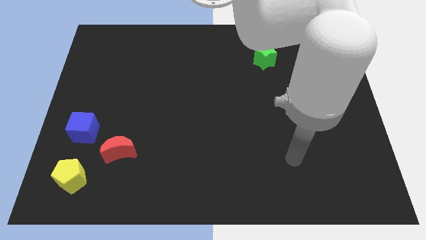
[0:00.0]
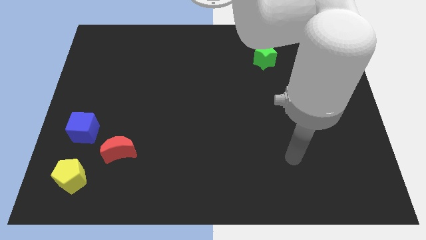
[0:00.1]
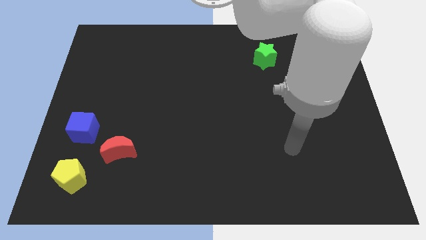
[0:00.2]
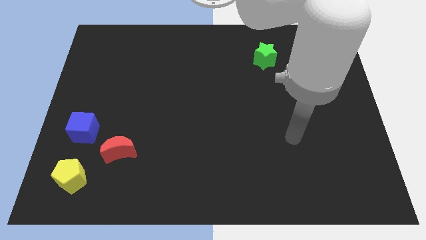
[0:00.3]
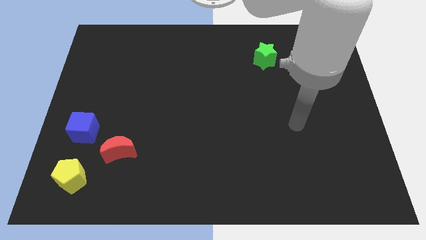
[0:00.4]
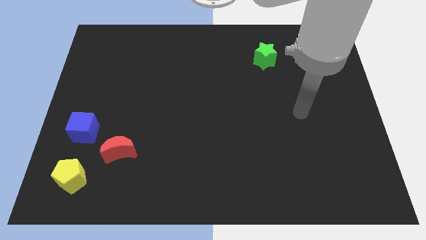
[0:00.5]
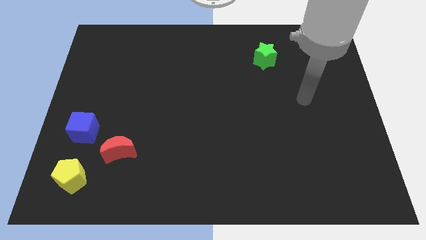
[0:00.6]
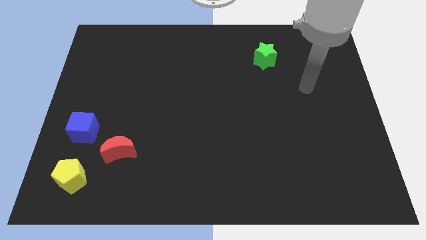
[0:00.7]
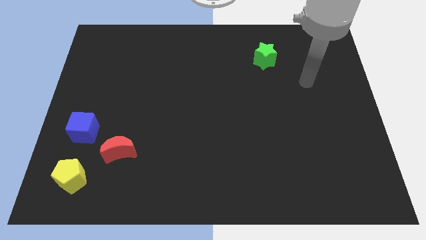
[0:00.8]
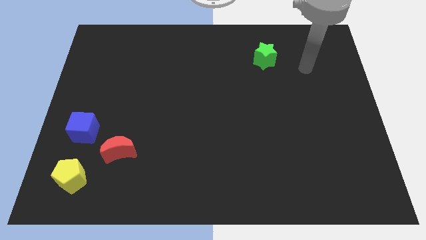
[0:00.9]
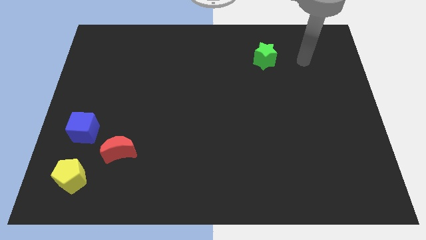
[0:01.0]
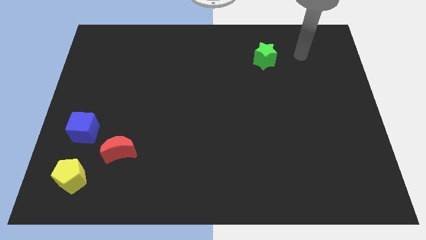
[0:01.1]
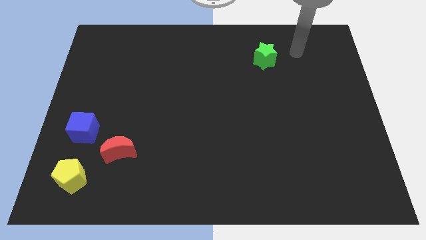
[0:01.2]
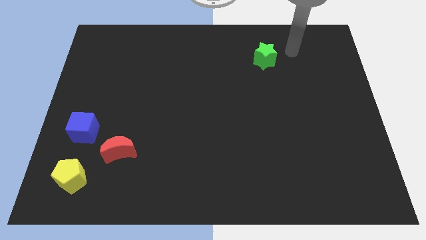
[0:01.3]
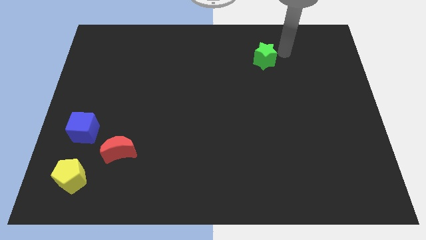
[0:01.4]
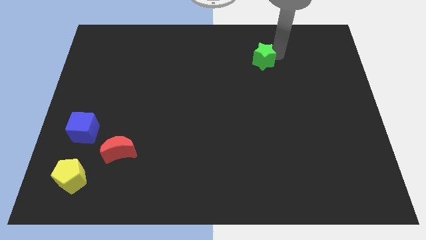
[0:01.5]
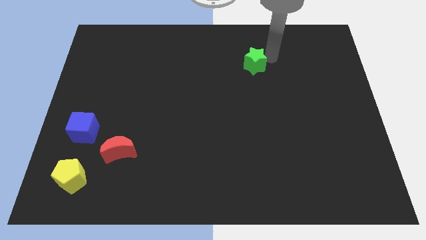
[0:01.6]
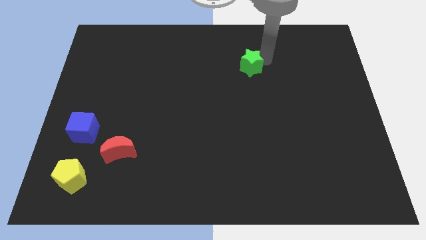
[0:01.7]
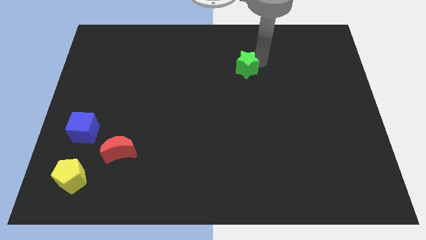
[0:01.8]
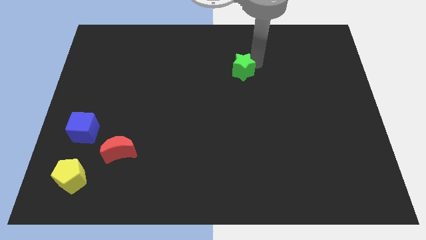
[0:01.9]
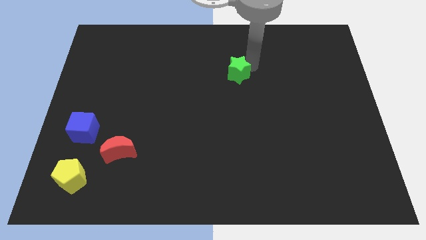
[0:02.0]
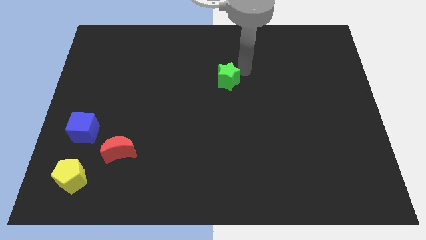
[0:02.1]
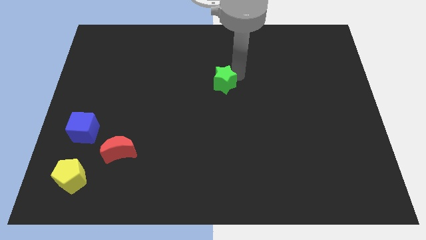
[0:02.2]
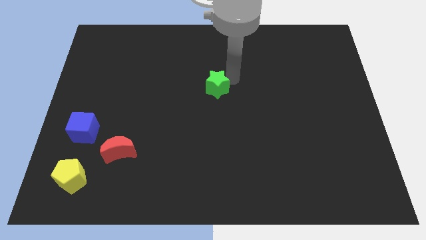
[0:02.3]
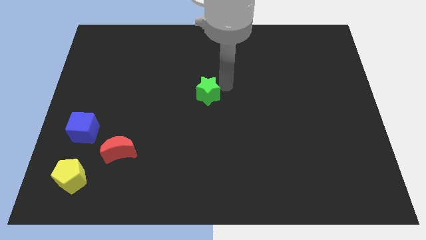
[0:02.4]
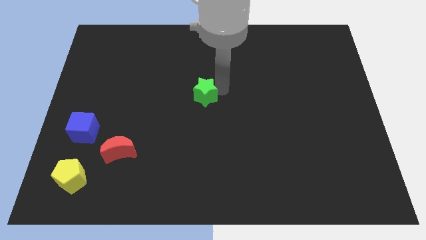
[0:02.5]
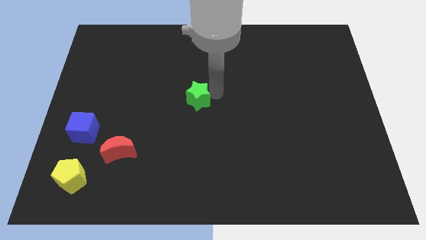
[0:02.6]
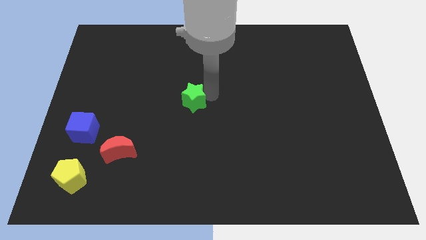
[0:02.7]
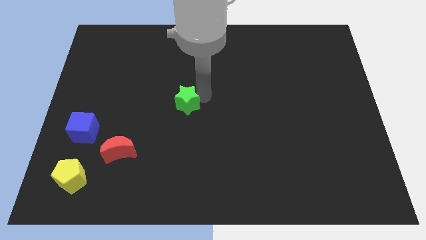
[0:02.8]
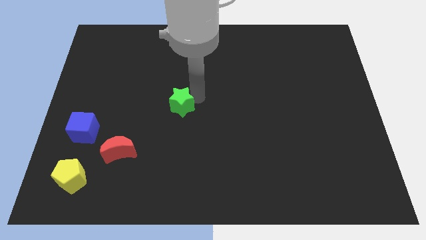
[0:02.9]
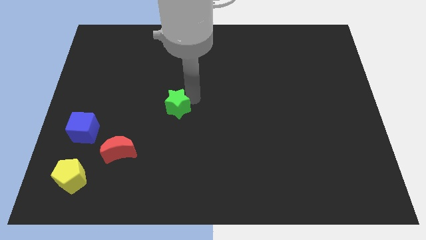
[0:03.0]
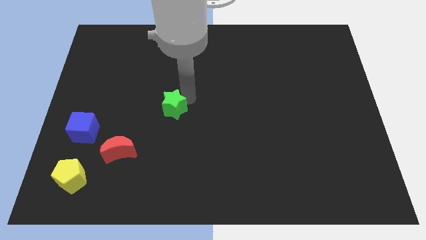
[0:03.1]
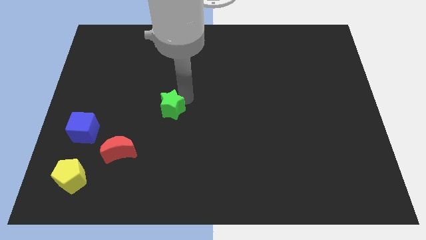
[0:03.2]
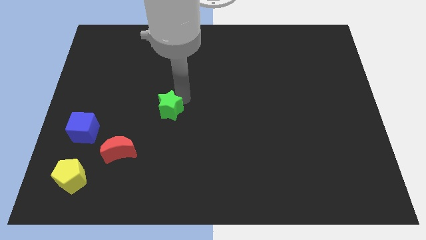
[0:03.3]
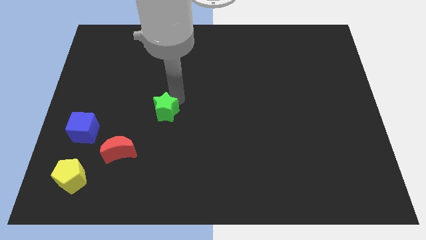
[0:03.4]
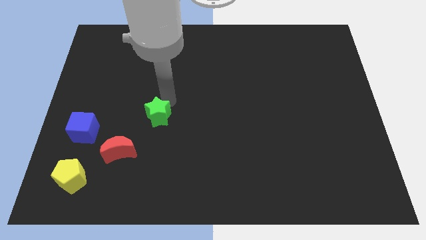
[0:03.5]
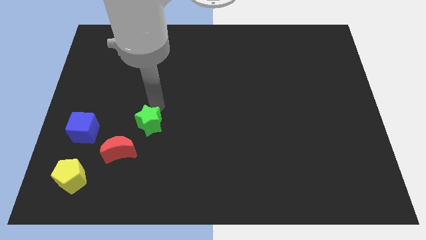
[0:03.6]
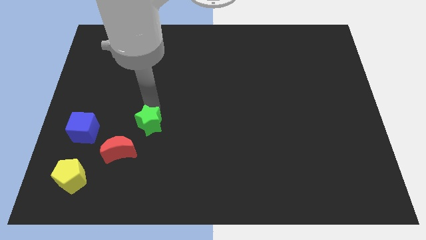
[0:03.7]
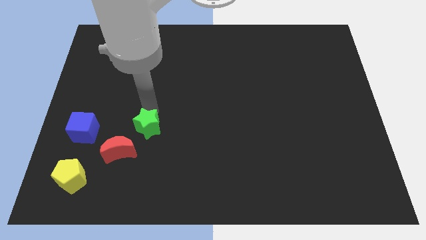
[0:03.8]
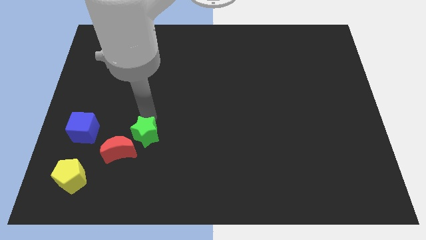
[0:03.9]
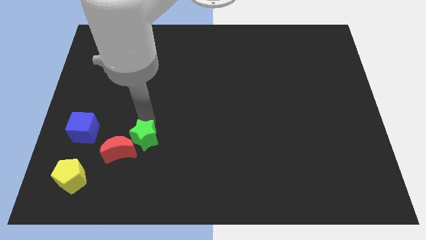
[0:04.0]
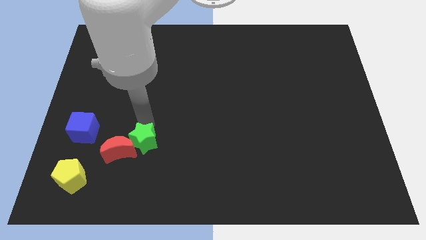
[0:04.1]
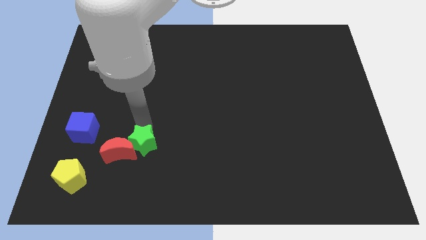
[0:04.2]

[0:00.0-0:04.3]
put the green star towards the red moon

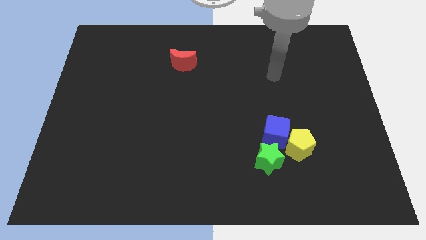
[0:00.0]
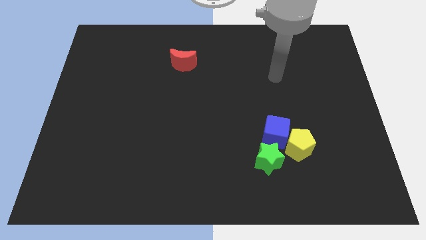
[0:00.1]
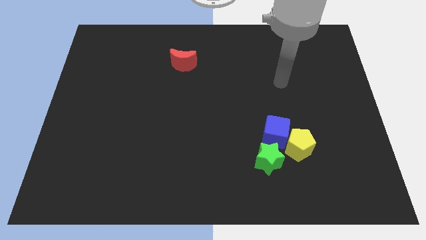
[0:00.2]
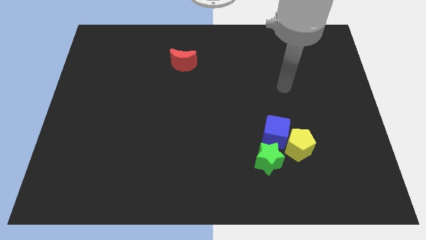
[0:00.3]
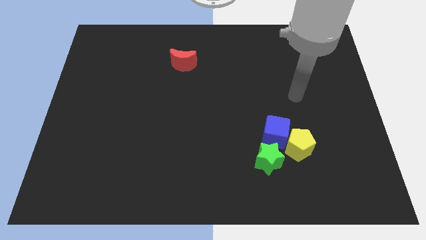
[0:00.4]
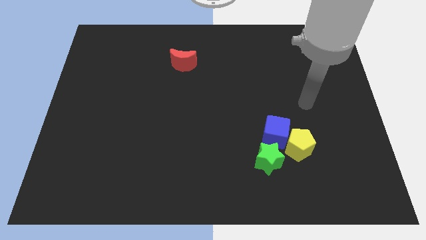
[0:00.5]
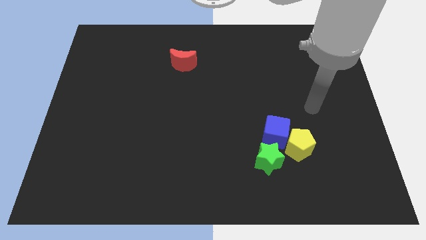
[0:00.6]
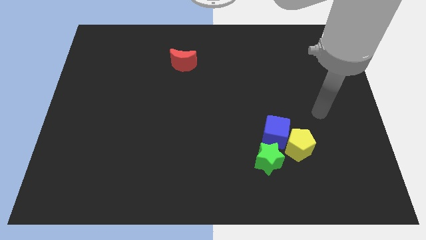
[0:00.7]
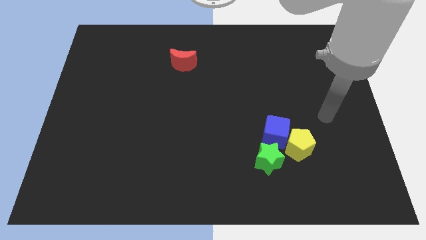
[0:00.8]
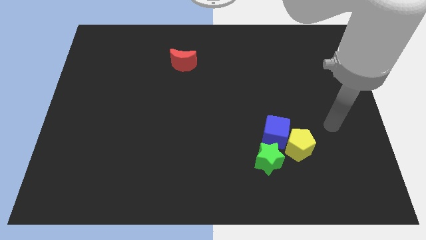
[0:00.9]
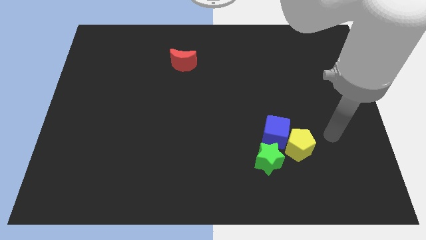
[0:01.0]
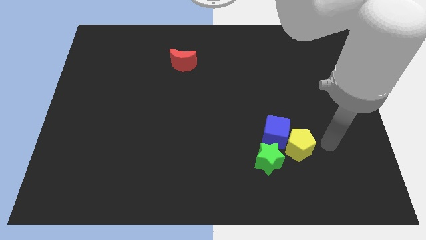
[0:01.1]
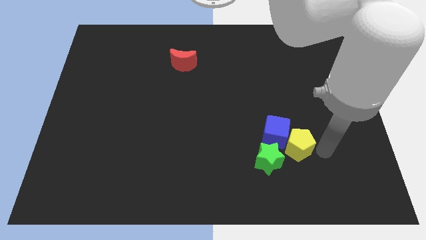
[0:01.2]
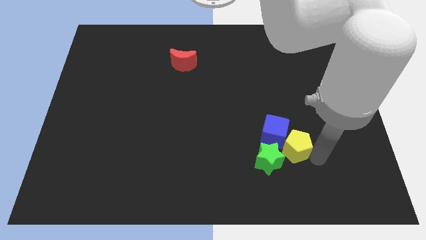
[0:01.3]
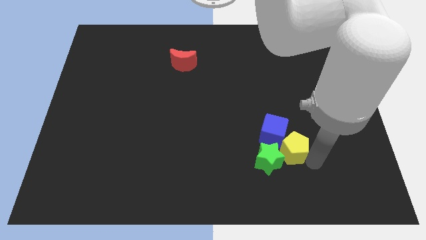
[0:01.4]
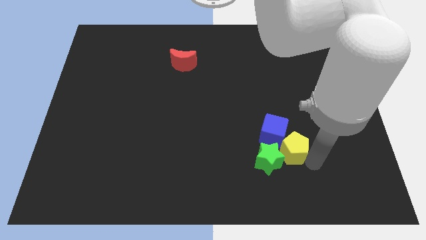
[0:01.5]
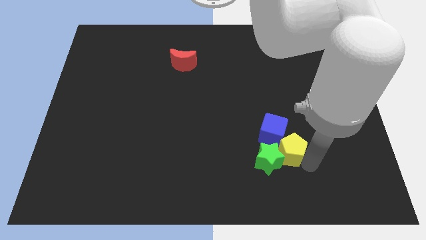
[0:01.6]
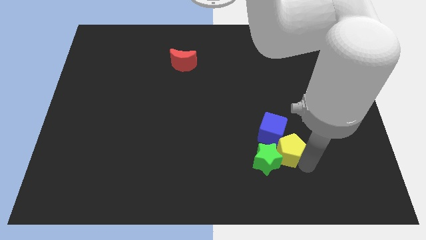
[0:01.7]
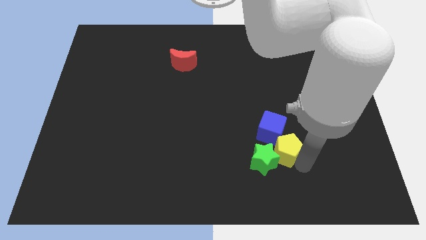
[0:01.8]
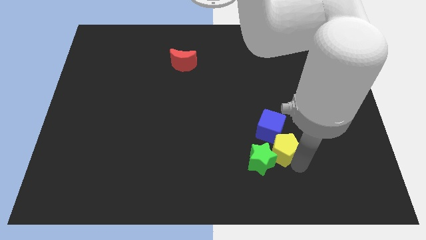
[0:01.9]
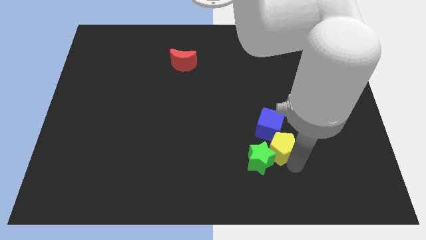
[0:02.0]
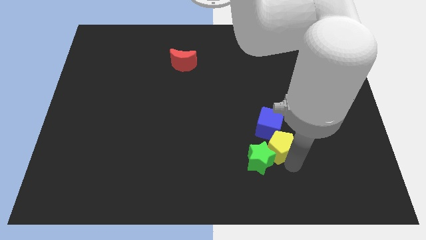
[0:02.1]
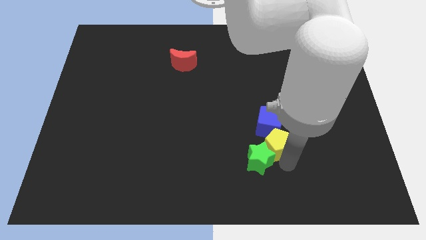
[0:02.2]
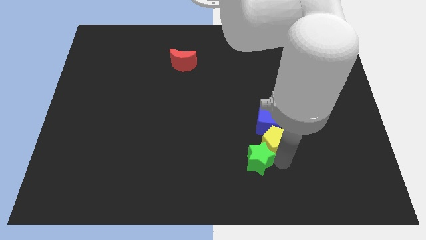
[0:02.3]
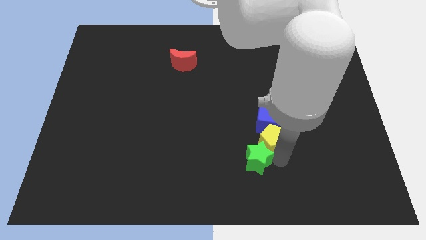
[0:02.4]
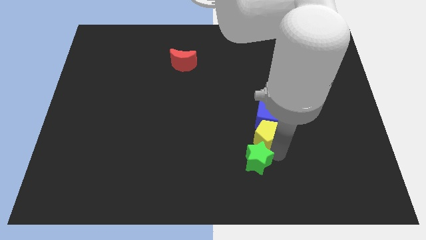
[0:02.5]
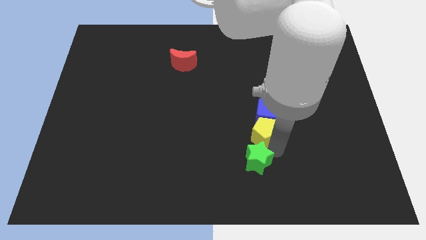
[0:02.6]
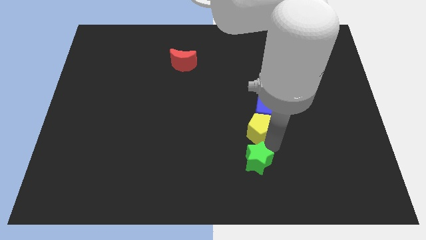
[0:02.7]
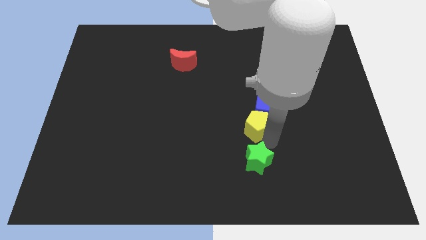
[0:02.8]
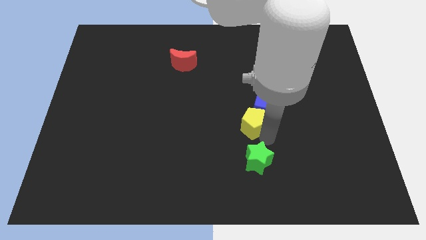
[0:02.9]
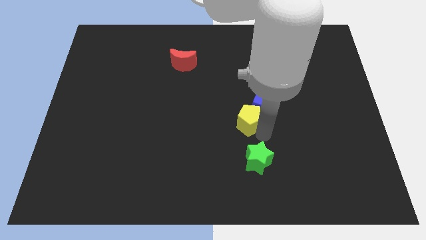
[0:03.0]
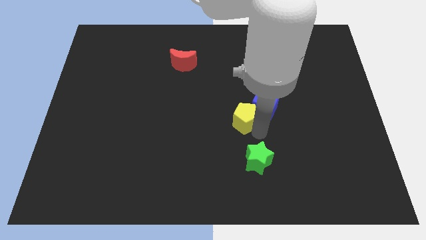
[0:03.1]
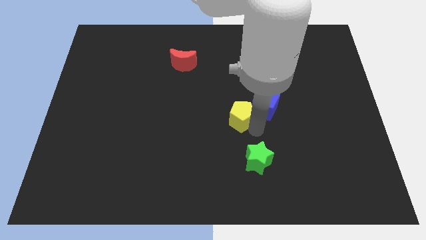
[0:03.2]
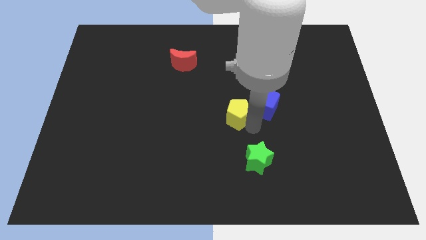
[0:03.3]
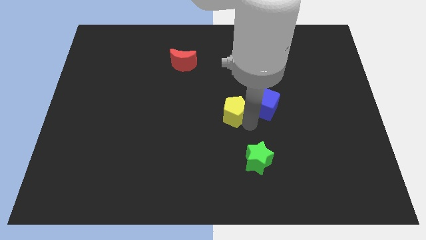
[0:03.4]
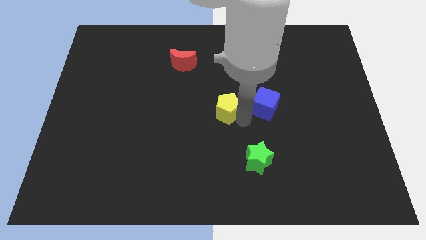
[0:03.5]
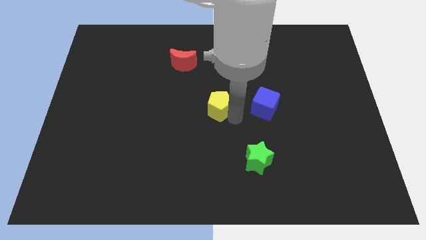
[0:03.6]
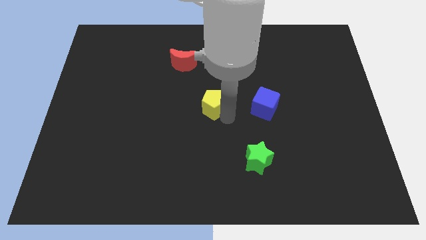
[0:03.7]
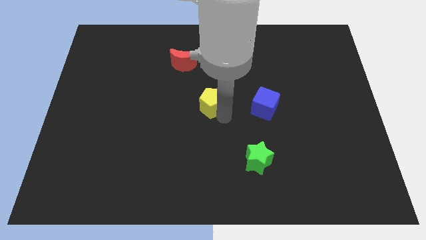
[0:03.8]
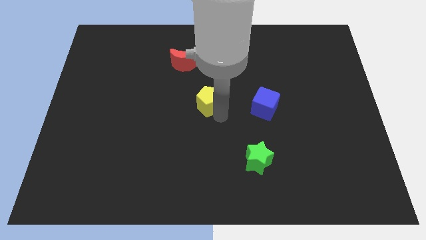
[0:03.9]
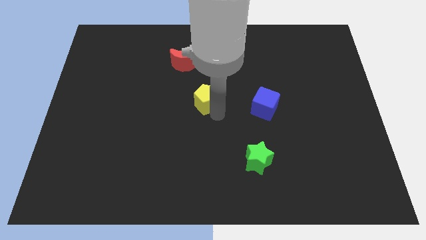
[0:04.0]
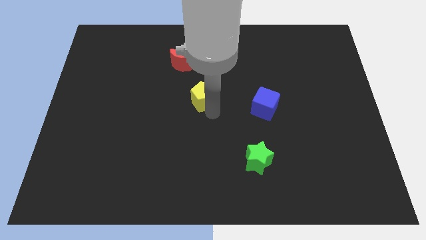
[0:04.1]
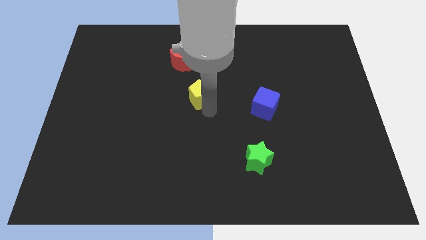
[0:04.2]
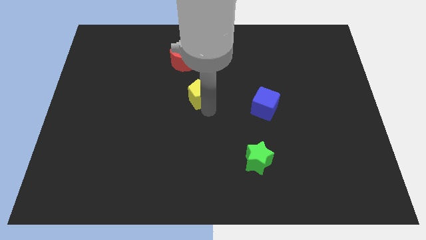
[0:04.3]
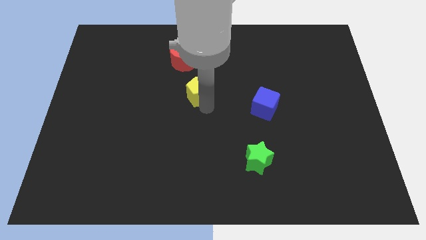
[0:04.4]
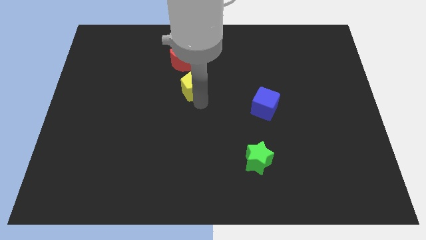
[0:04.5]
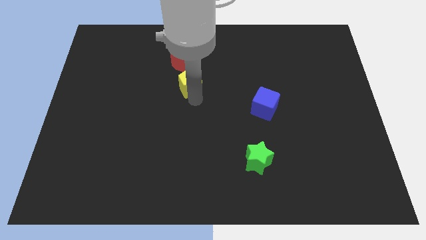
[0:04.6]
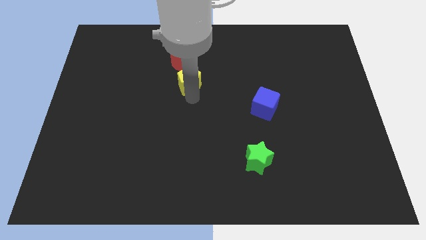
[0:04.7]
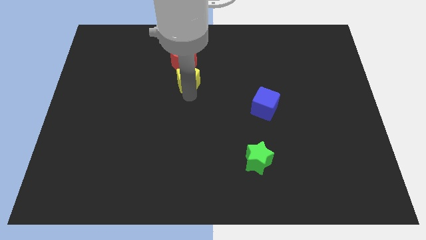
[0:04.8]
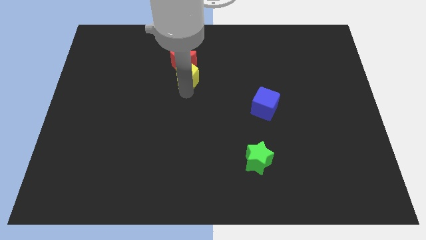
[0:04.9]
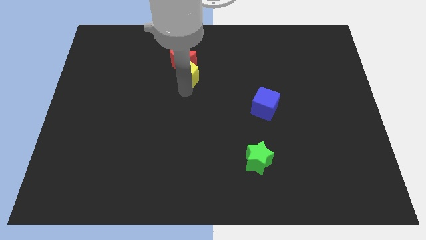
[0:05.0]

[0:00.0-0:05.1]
put the pentagon next to the moon
